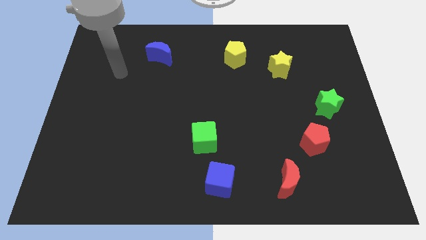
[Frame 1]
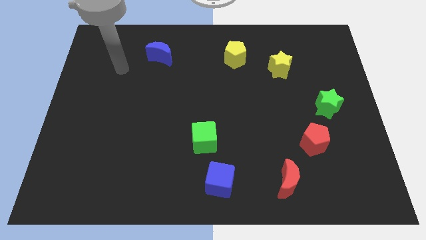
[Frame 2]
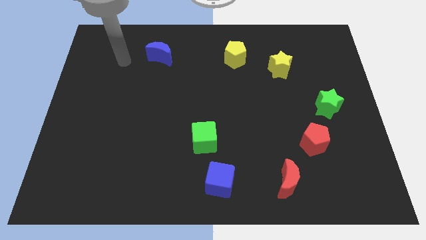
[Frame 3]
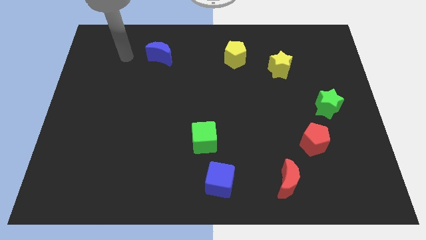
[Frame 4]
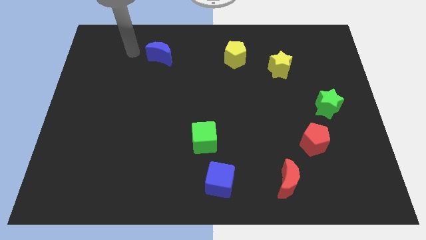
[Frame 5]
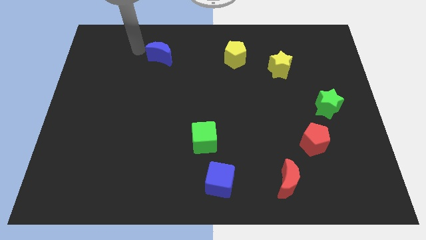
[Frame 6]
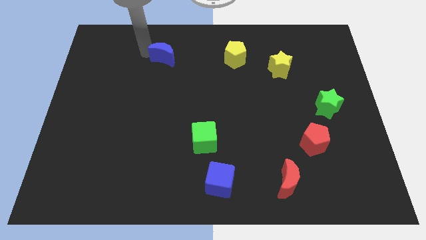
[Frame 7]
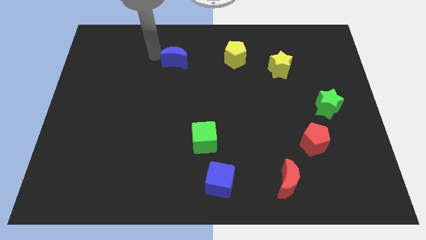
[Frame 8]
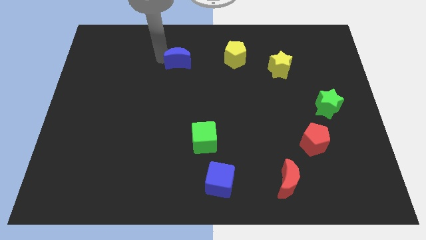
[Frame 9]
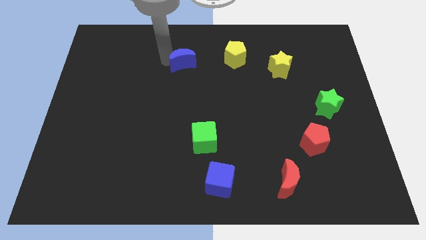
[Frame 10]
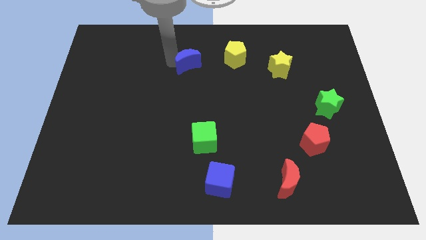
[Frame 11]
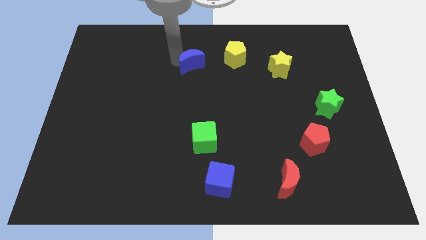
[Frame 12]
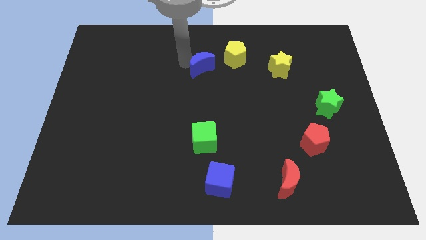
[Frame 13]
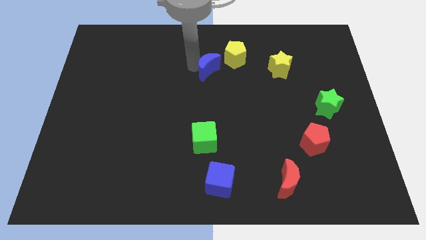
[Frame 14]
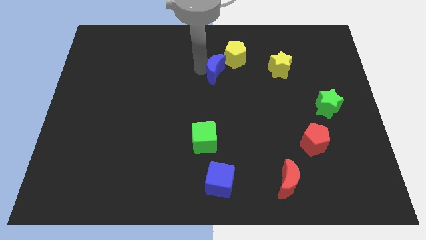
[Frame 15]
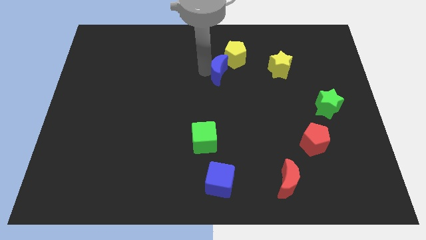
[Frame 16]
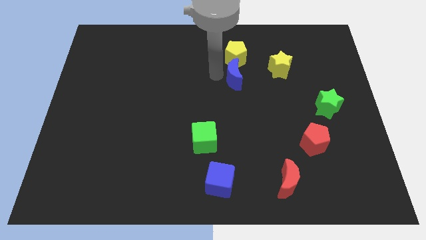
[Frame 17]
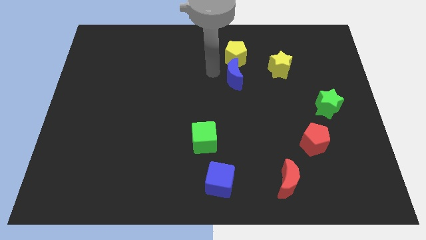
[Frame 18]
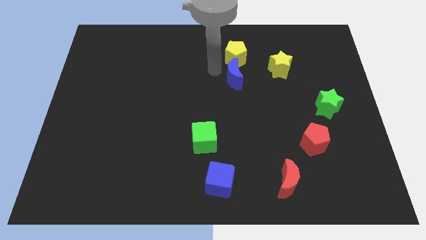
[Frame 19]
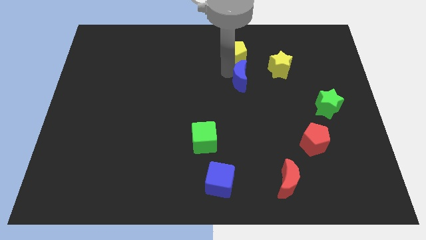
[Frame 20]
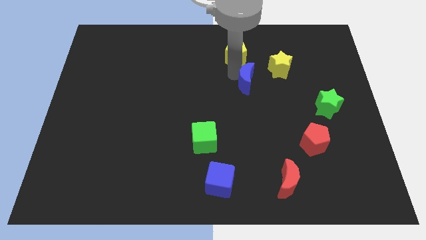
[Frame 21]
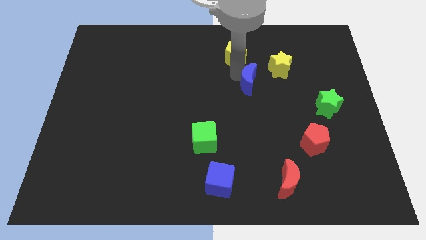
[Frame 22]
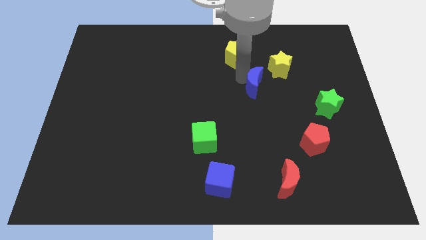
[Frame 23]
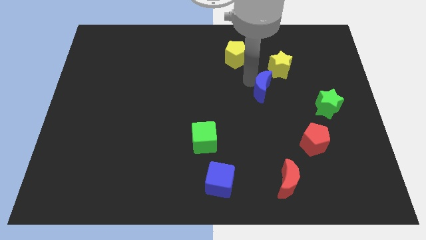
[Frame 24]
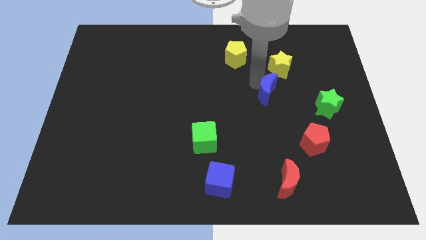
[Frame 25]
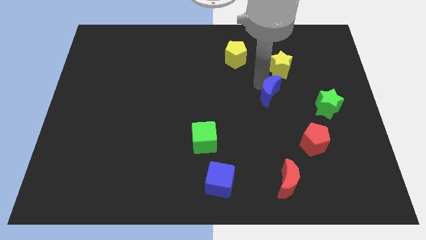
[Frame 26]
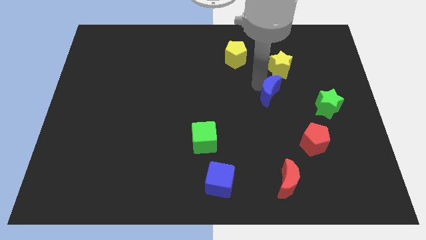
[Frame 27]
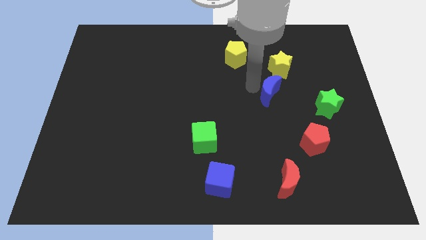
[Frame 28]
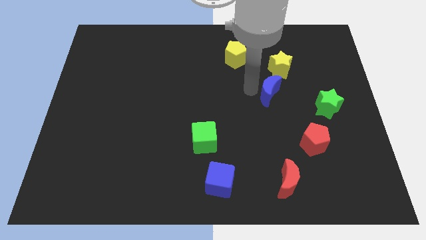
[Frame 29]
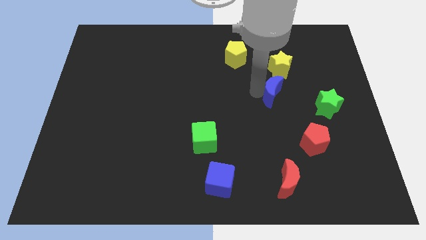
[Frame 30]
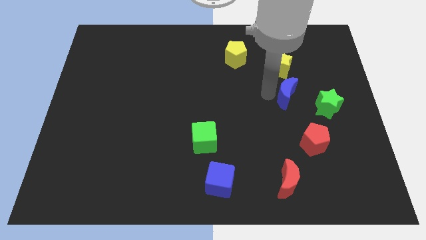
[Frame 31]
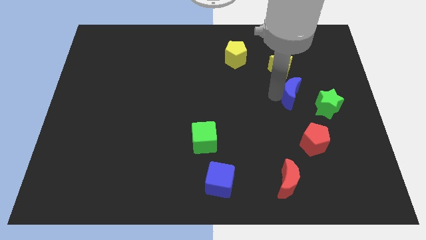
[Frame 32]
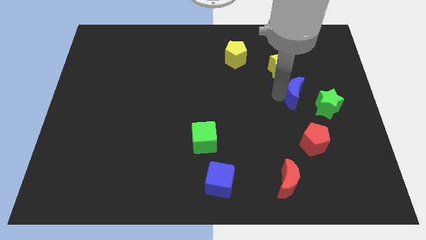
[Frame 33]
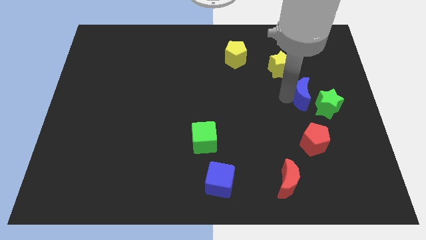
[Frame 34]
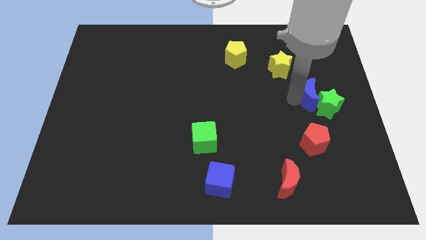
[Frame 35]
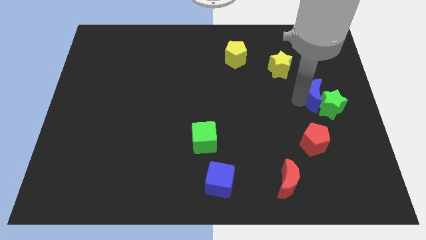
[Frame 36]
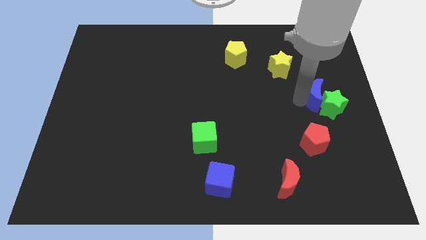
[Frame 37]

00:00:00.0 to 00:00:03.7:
slide the blue moon next to the green star

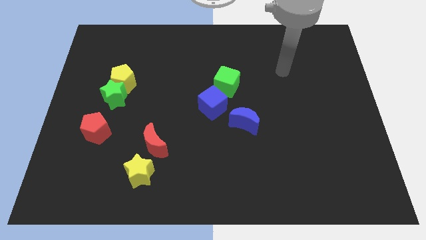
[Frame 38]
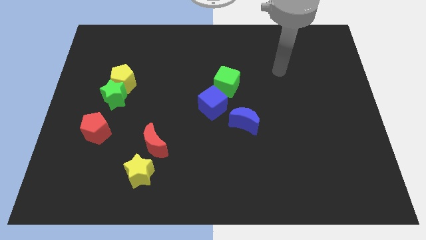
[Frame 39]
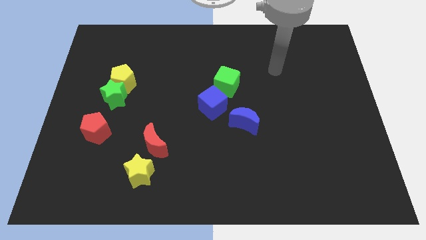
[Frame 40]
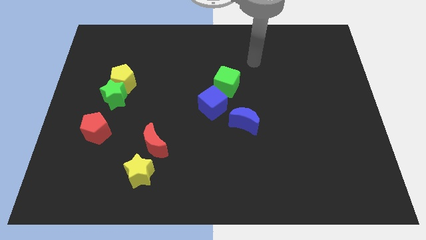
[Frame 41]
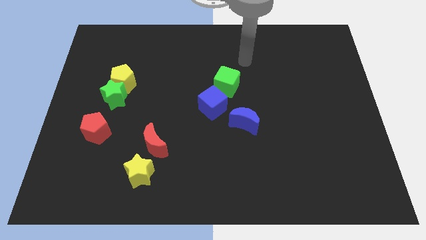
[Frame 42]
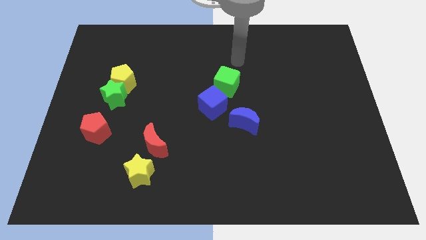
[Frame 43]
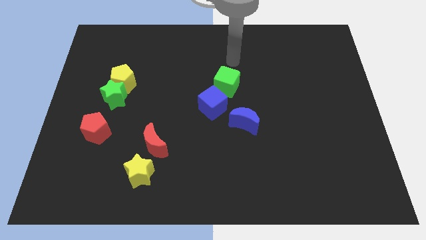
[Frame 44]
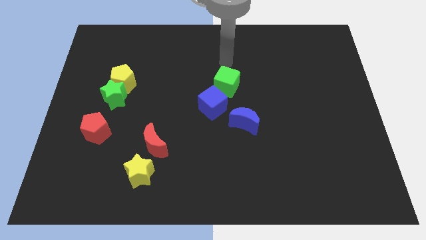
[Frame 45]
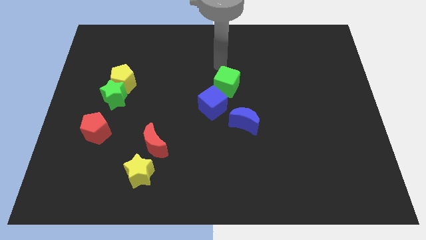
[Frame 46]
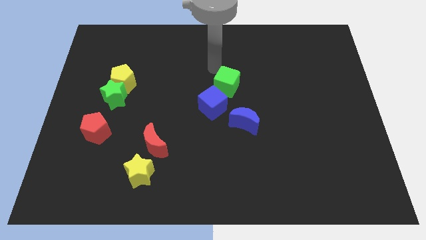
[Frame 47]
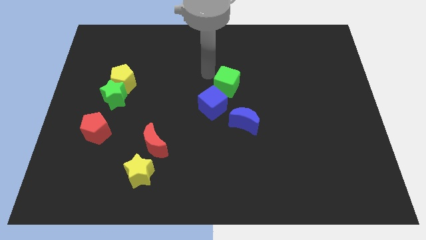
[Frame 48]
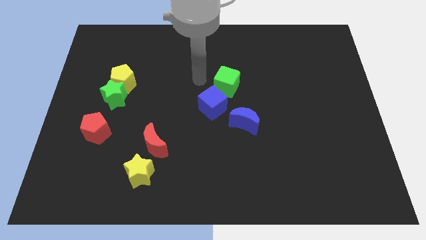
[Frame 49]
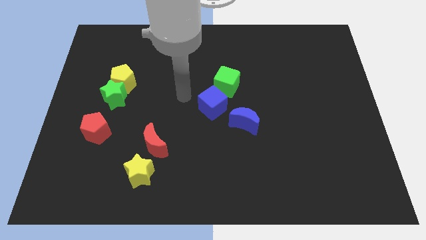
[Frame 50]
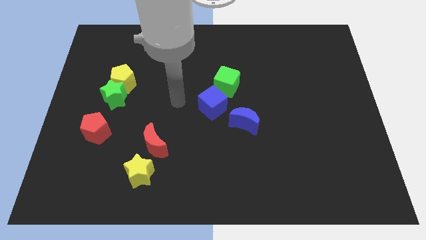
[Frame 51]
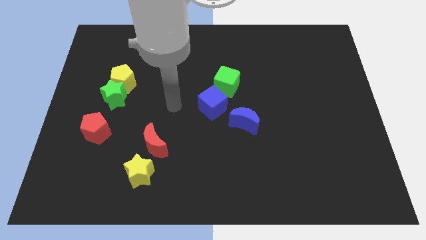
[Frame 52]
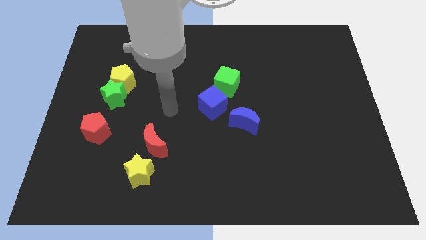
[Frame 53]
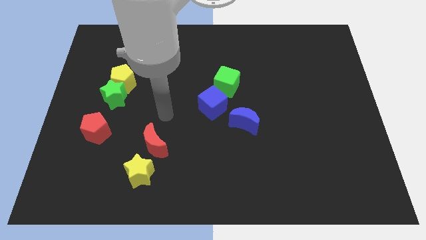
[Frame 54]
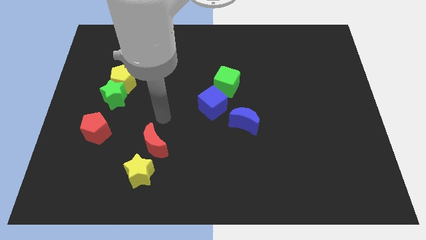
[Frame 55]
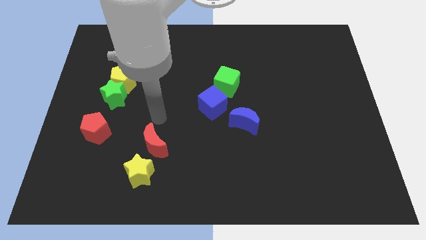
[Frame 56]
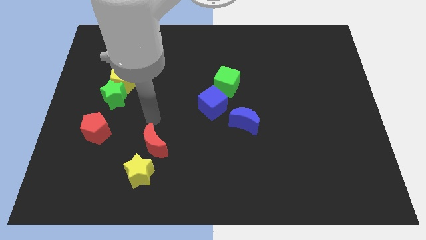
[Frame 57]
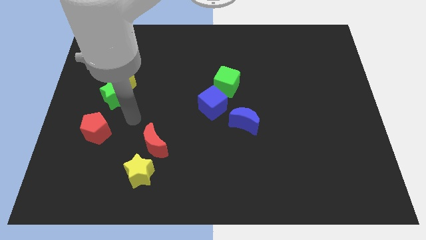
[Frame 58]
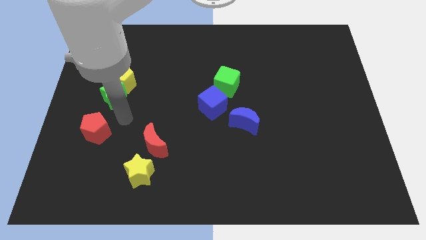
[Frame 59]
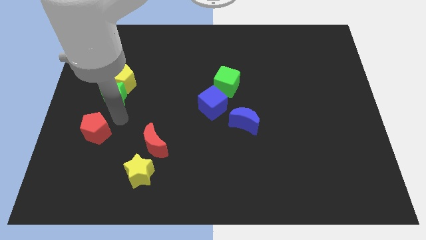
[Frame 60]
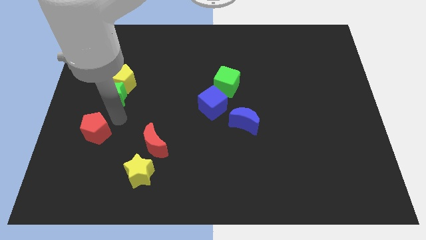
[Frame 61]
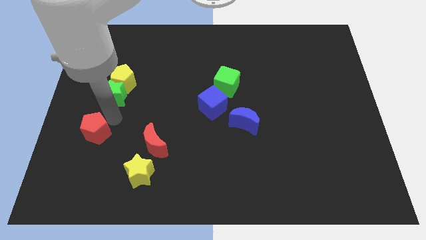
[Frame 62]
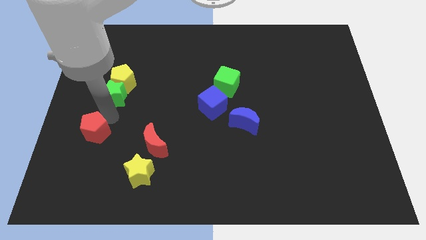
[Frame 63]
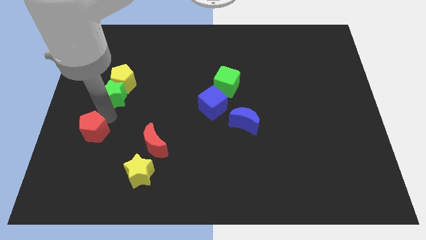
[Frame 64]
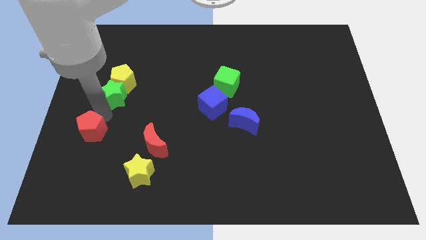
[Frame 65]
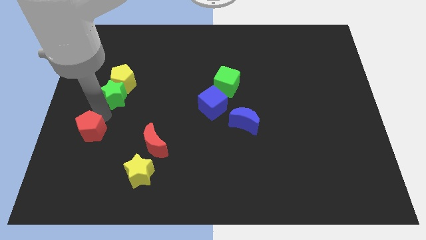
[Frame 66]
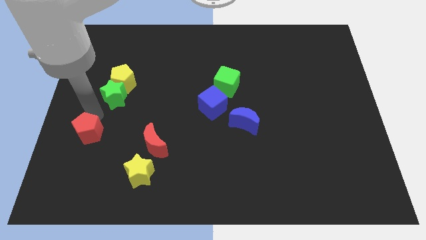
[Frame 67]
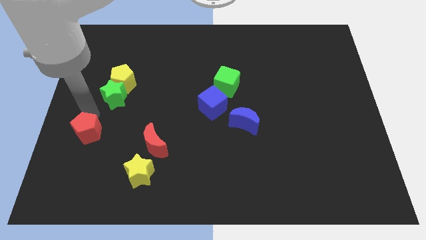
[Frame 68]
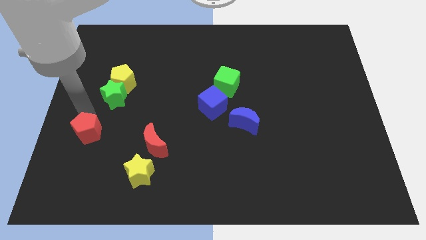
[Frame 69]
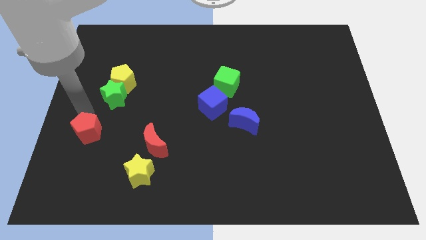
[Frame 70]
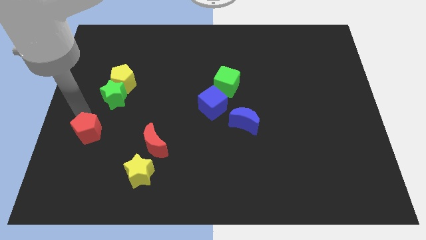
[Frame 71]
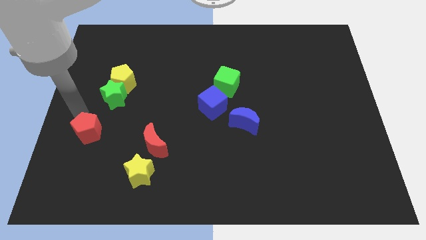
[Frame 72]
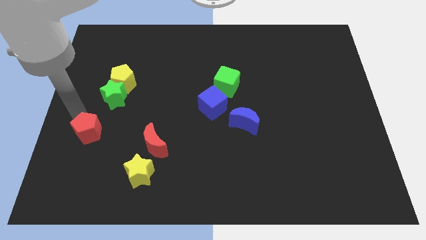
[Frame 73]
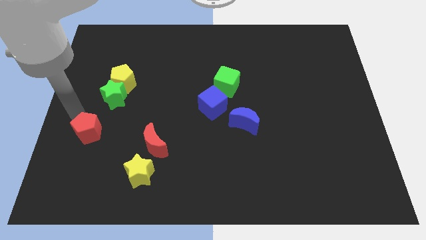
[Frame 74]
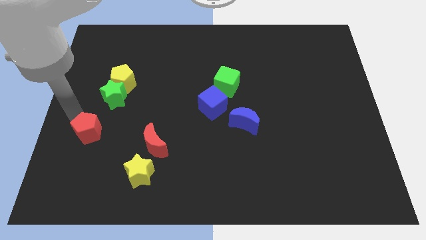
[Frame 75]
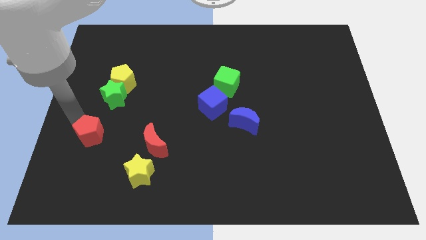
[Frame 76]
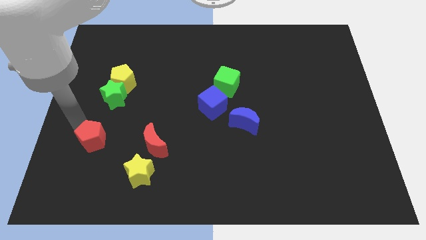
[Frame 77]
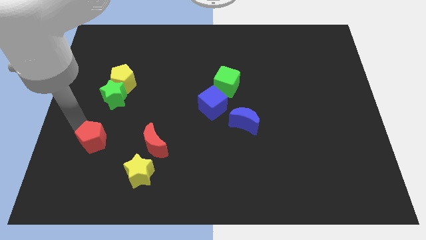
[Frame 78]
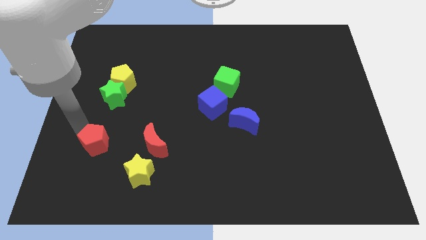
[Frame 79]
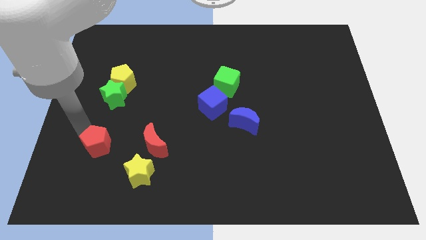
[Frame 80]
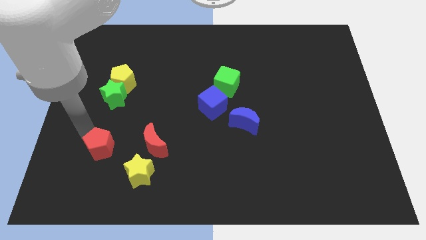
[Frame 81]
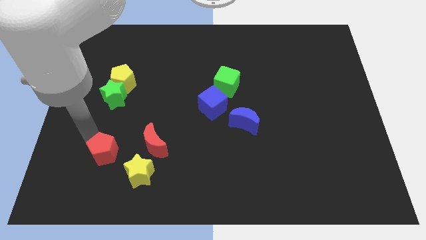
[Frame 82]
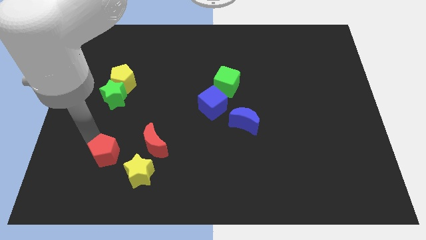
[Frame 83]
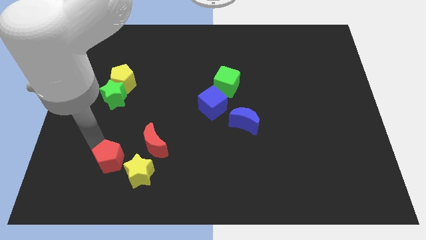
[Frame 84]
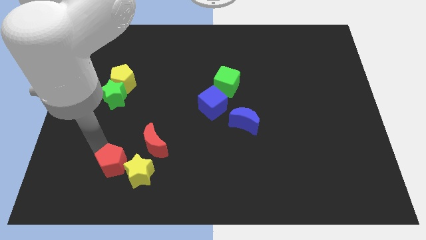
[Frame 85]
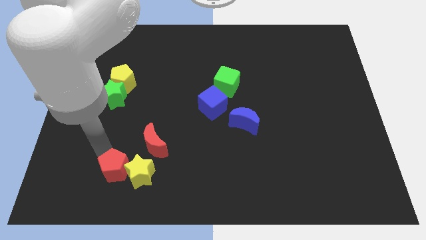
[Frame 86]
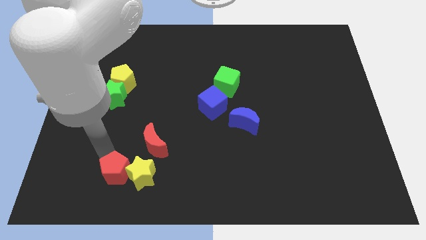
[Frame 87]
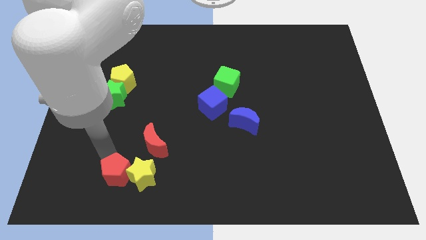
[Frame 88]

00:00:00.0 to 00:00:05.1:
put the red pentagon towards the yellow star
